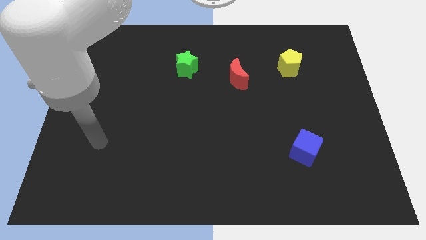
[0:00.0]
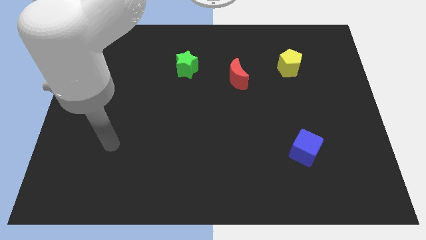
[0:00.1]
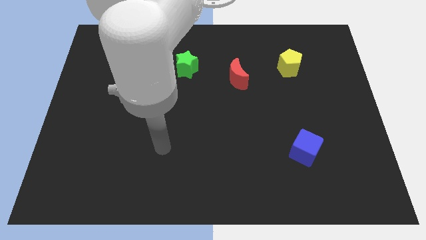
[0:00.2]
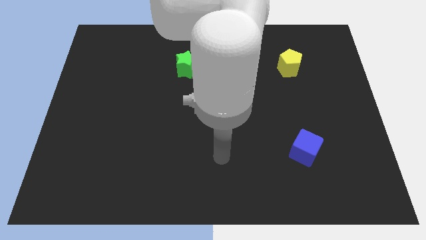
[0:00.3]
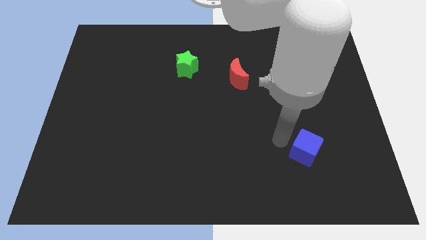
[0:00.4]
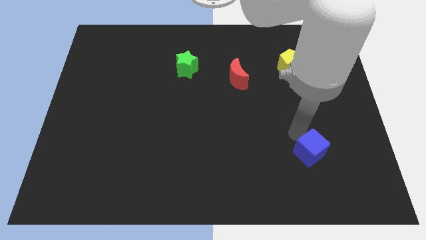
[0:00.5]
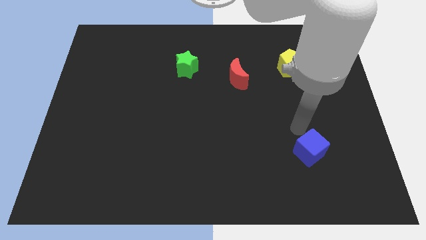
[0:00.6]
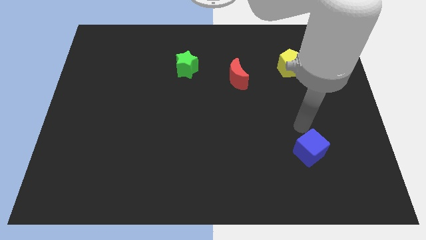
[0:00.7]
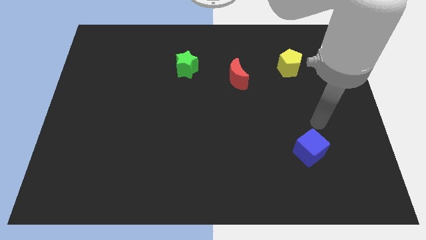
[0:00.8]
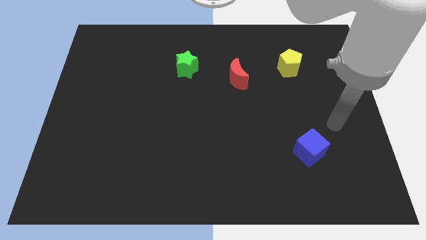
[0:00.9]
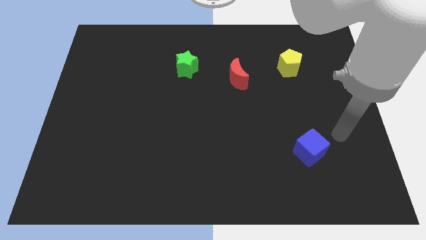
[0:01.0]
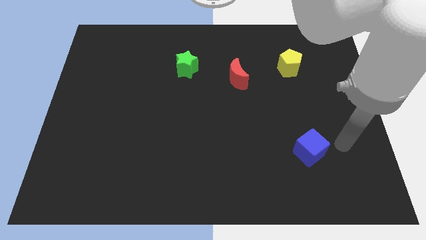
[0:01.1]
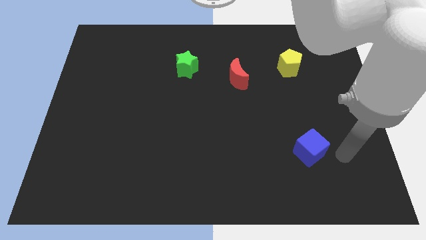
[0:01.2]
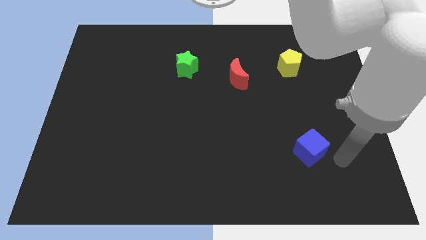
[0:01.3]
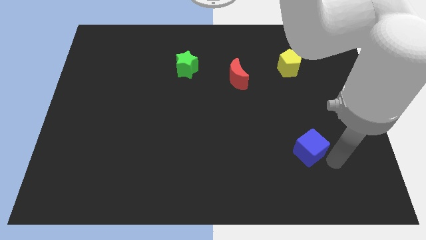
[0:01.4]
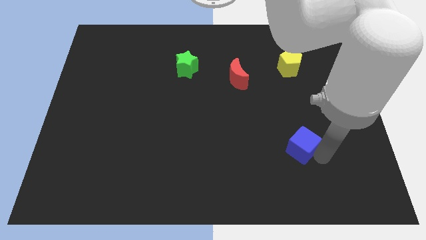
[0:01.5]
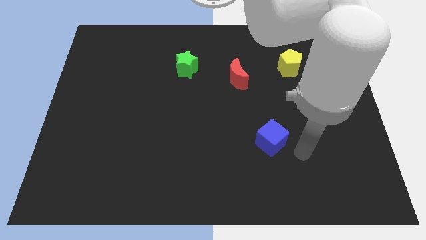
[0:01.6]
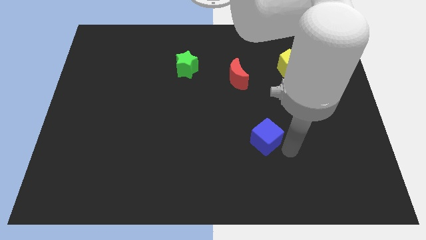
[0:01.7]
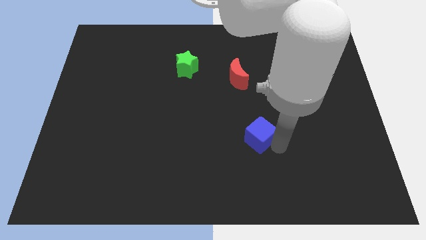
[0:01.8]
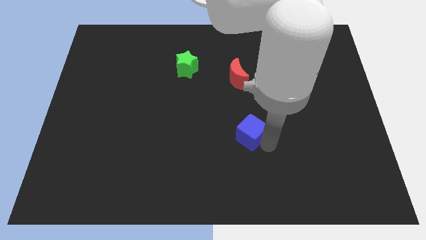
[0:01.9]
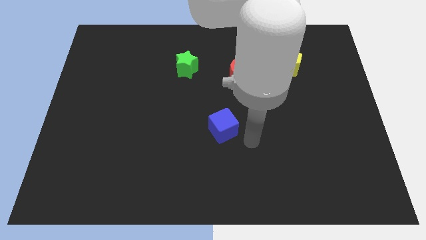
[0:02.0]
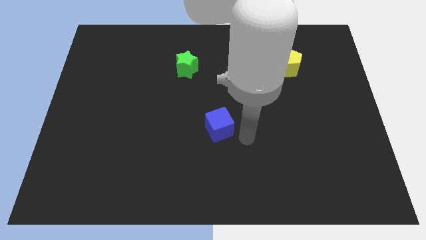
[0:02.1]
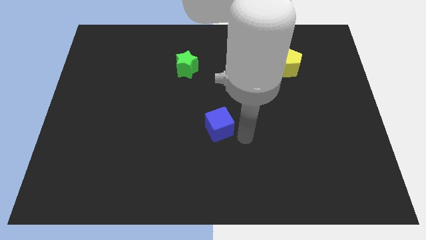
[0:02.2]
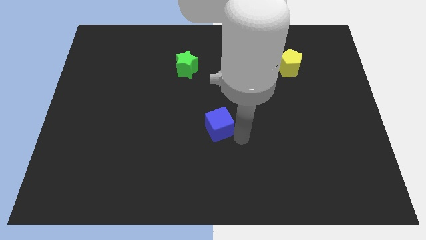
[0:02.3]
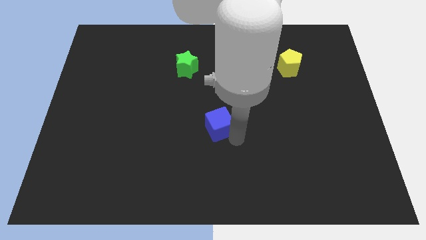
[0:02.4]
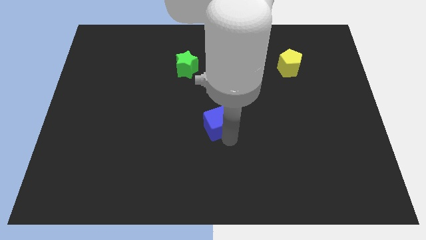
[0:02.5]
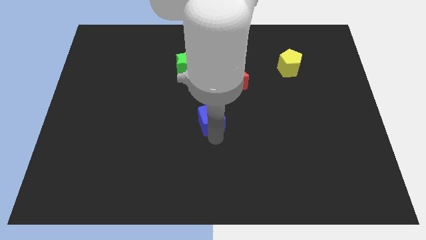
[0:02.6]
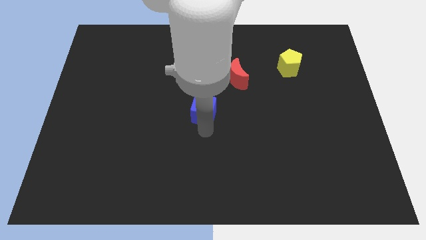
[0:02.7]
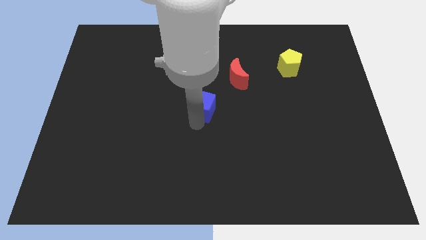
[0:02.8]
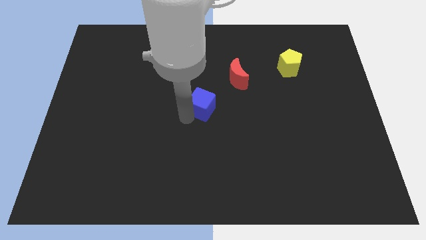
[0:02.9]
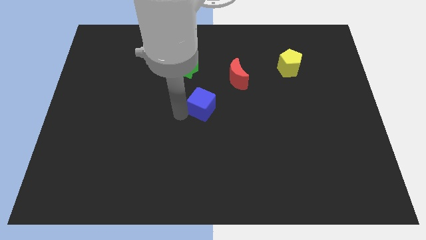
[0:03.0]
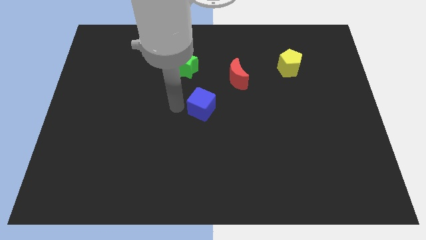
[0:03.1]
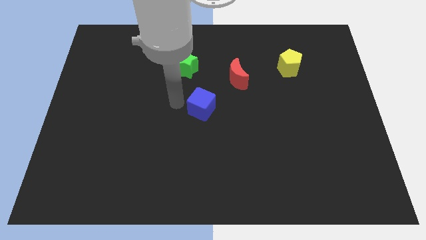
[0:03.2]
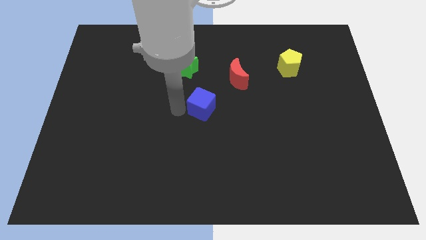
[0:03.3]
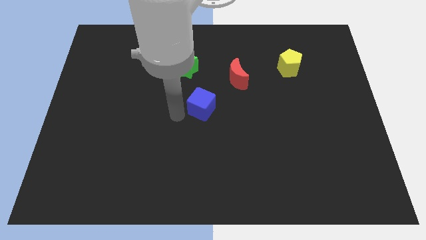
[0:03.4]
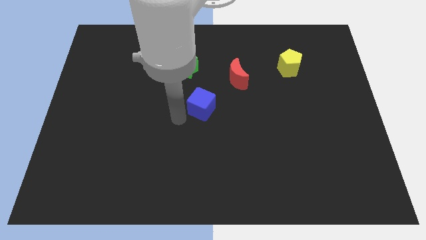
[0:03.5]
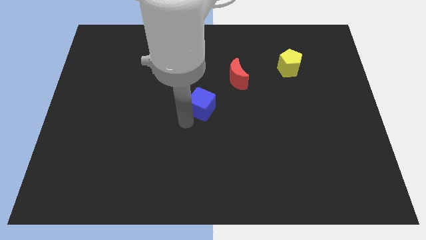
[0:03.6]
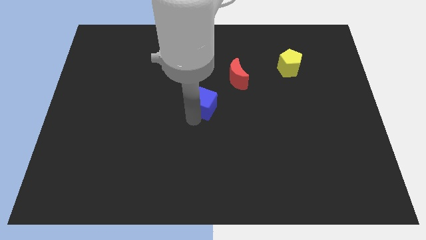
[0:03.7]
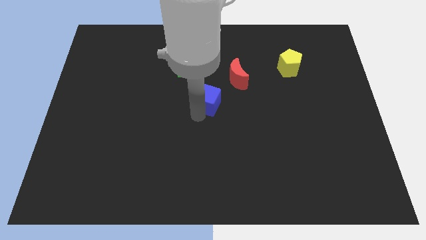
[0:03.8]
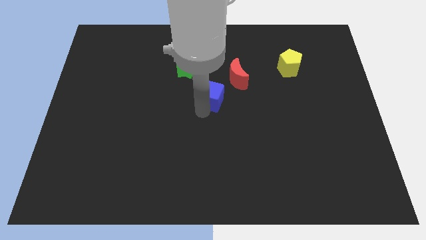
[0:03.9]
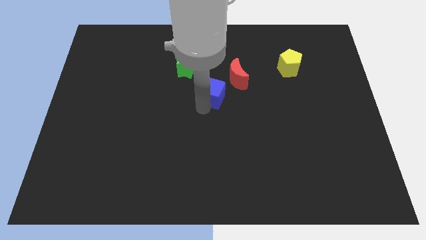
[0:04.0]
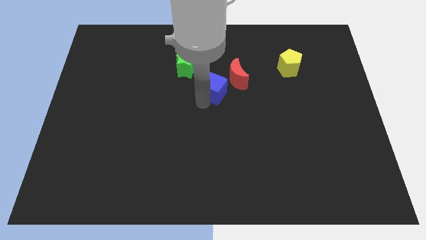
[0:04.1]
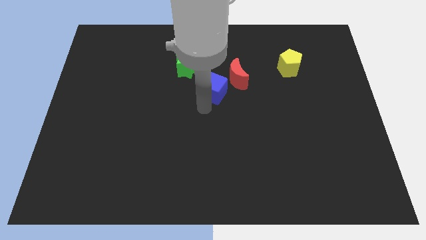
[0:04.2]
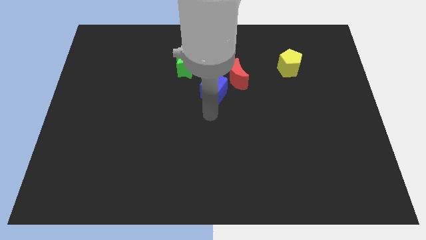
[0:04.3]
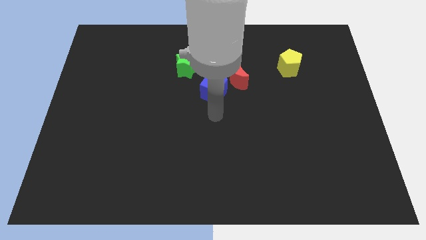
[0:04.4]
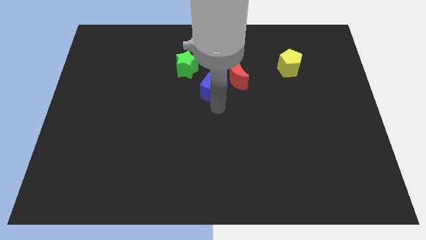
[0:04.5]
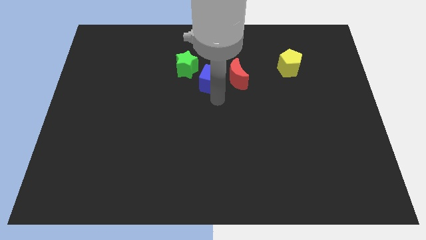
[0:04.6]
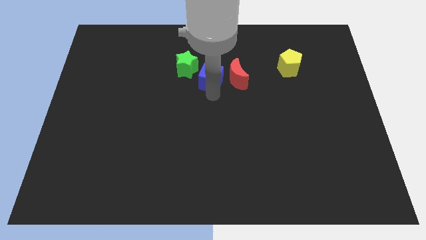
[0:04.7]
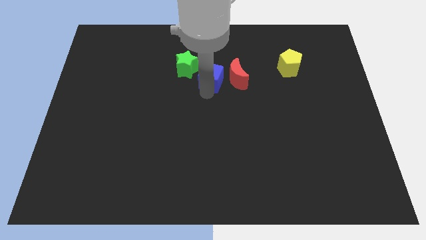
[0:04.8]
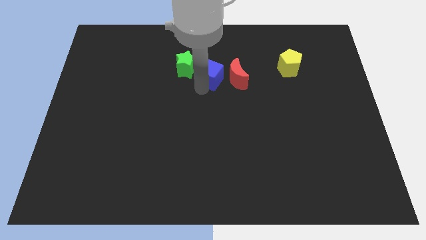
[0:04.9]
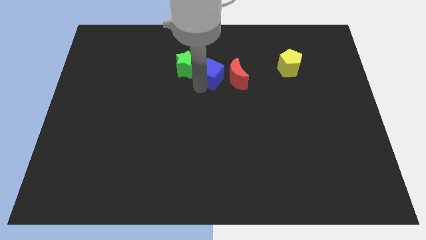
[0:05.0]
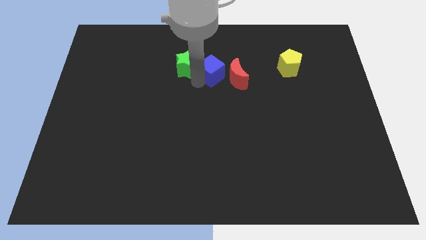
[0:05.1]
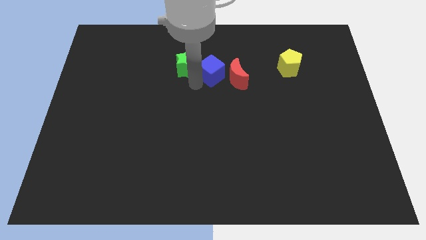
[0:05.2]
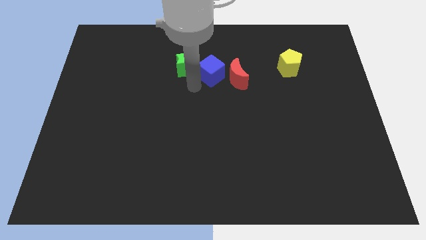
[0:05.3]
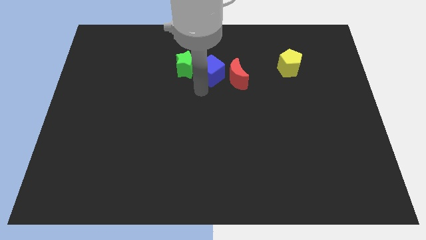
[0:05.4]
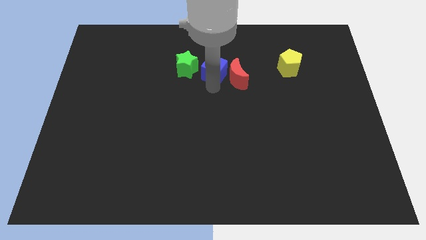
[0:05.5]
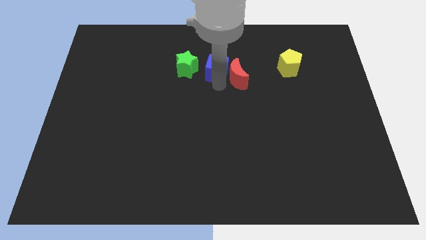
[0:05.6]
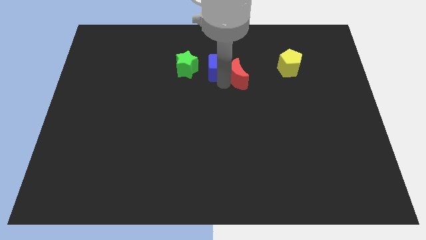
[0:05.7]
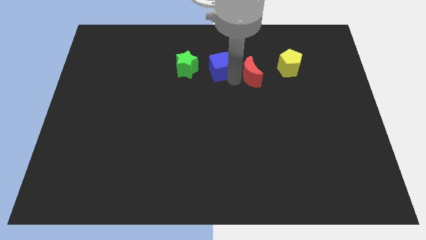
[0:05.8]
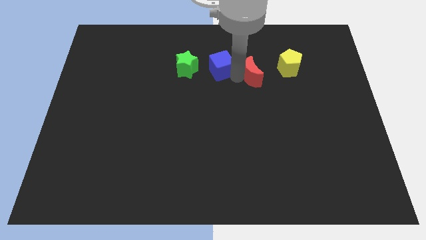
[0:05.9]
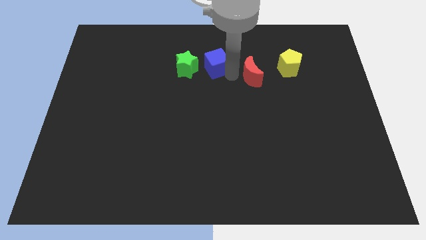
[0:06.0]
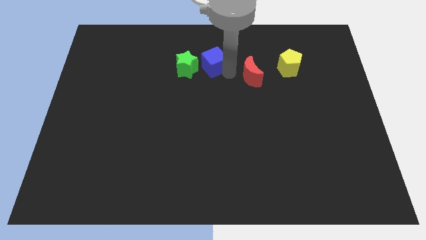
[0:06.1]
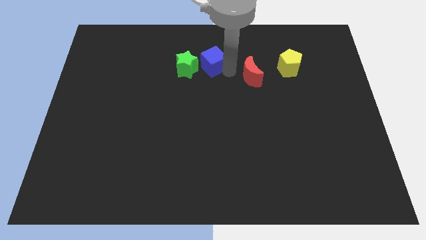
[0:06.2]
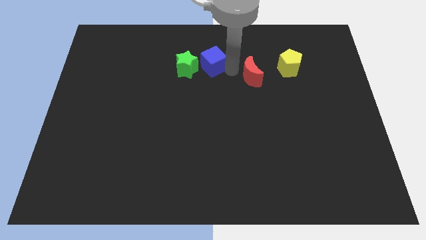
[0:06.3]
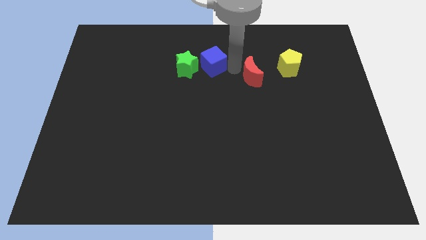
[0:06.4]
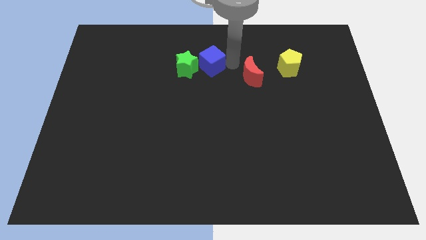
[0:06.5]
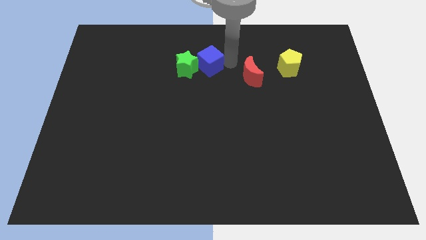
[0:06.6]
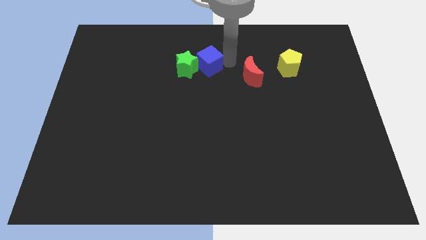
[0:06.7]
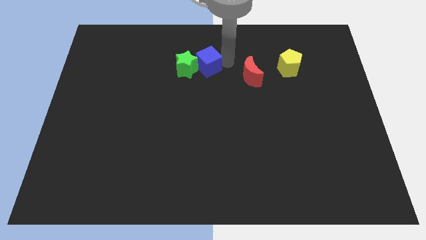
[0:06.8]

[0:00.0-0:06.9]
push the blue block next to the green star

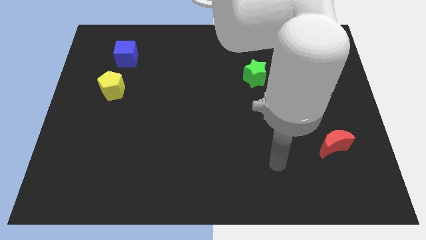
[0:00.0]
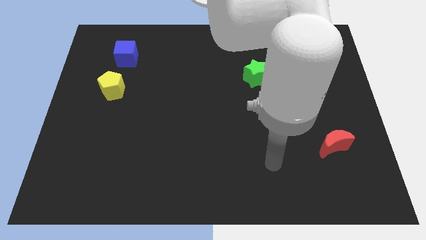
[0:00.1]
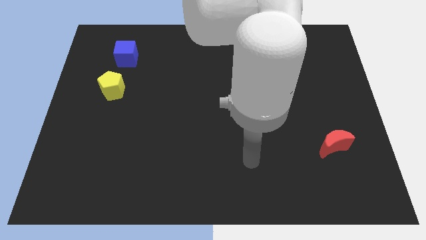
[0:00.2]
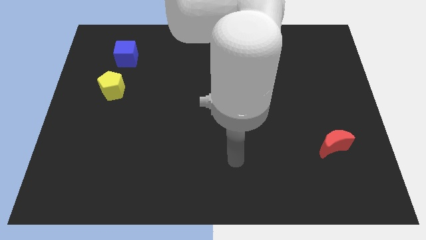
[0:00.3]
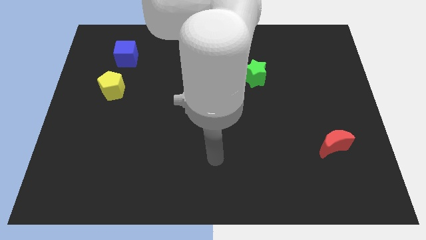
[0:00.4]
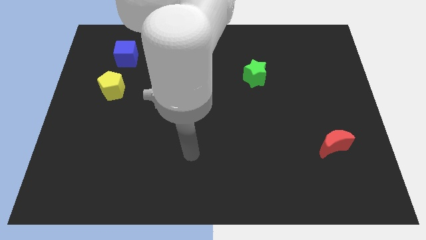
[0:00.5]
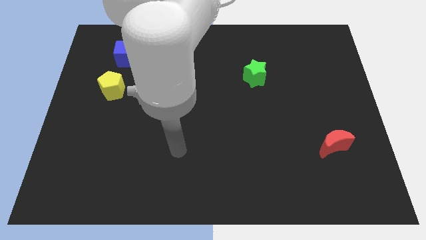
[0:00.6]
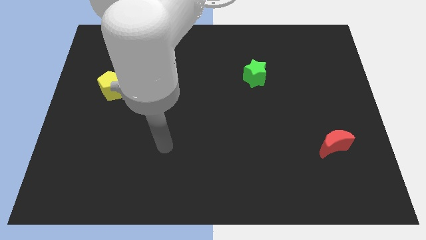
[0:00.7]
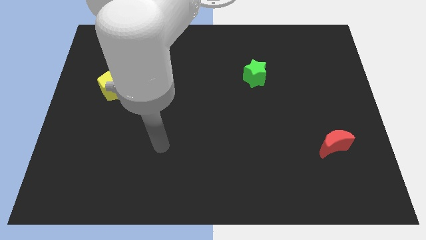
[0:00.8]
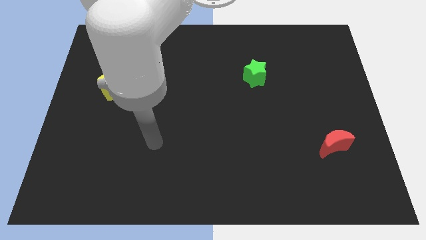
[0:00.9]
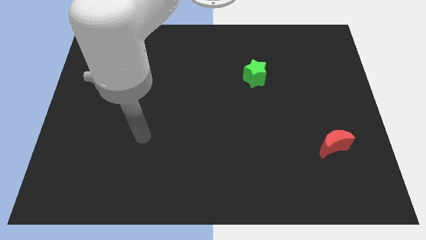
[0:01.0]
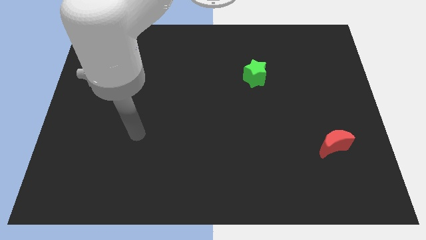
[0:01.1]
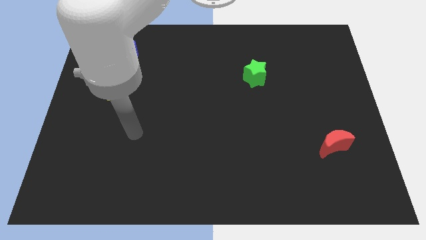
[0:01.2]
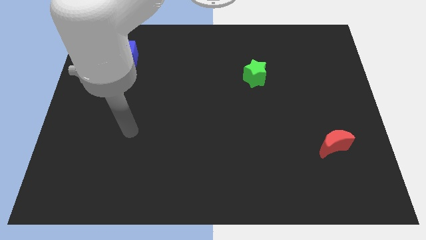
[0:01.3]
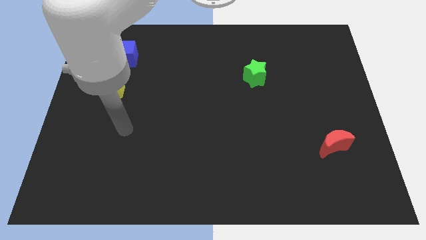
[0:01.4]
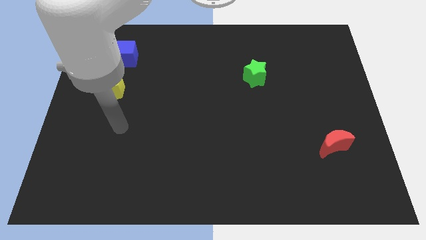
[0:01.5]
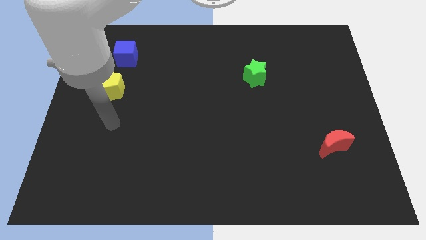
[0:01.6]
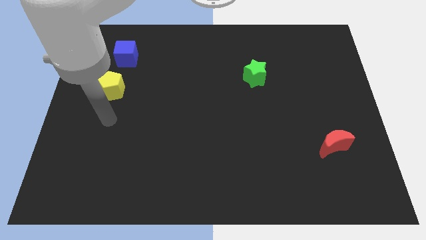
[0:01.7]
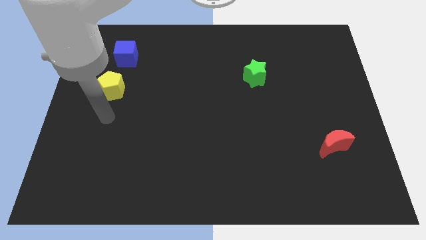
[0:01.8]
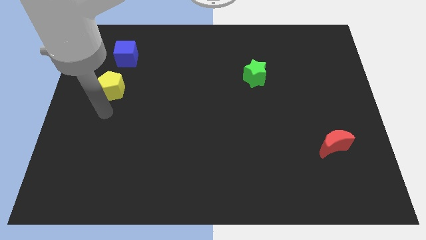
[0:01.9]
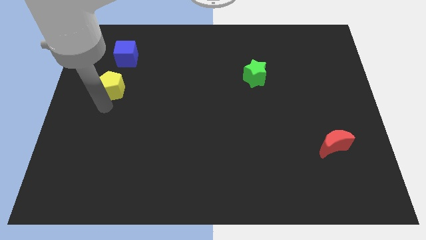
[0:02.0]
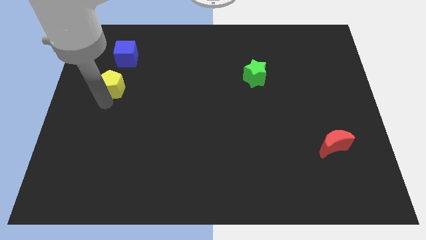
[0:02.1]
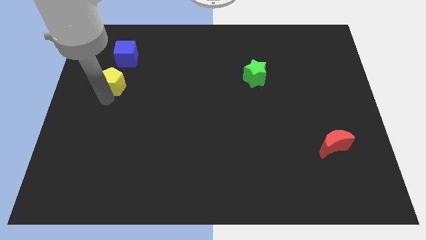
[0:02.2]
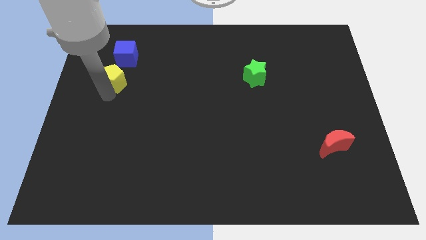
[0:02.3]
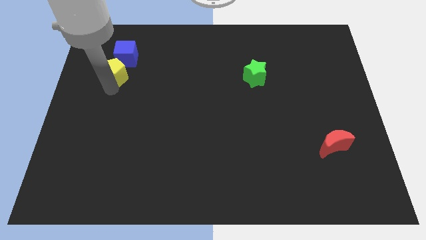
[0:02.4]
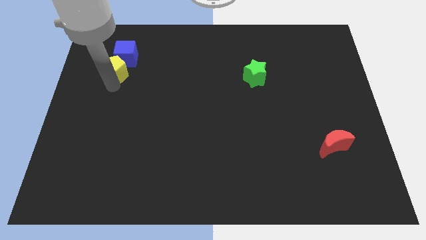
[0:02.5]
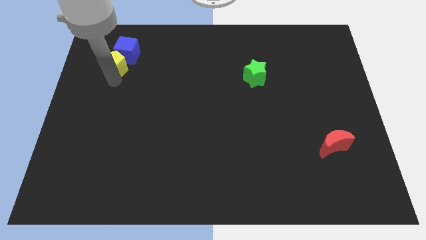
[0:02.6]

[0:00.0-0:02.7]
put the yellow block towards the blue cube
